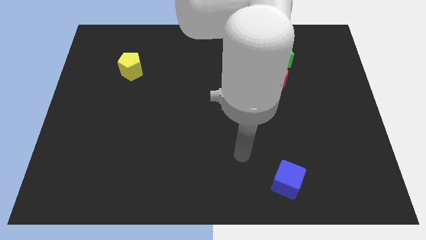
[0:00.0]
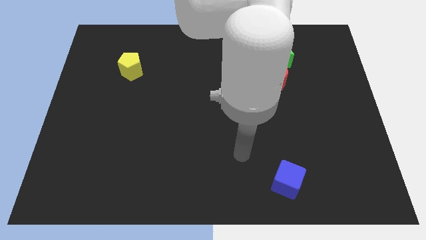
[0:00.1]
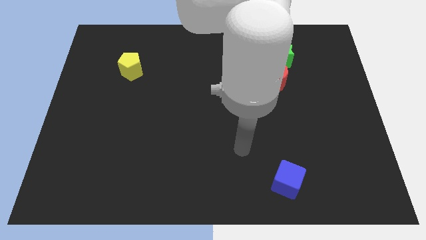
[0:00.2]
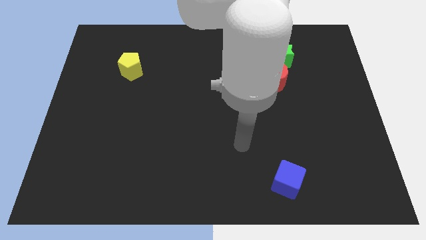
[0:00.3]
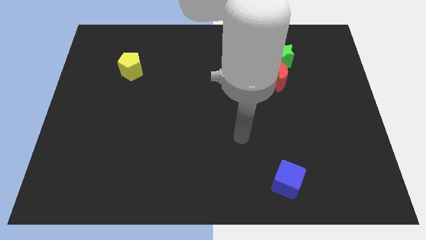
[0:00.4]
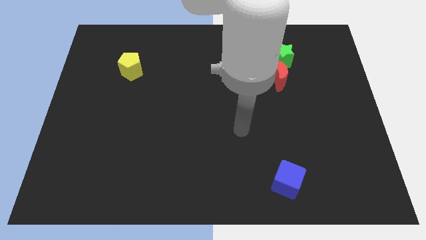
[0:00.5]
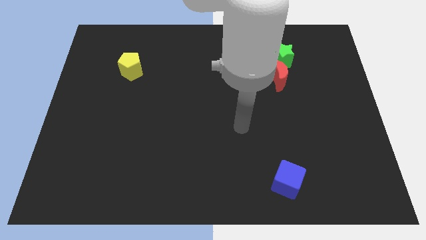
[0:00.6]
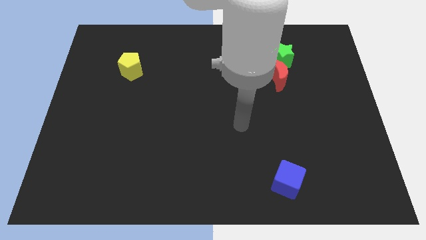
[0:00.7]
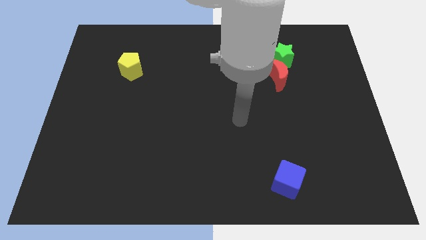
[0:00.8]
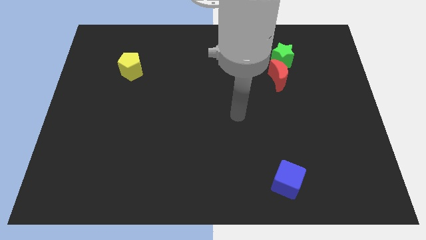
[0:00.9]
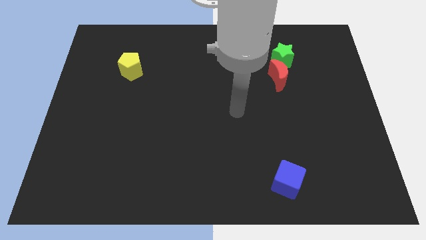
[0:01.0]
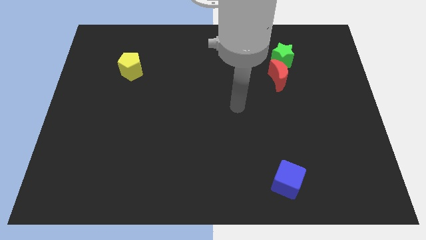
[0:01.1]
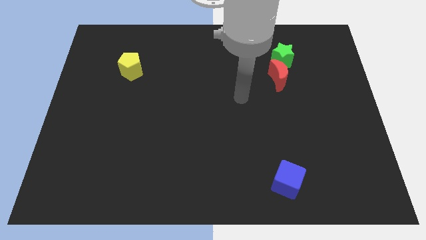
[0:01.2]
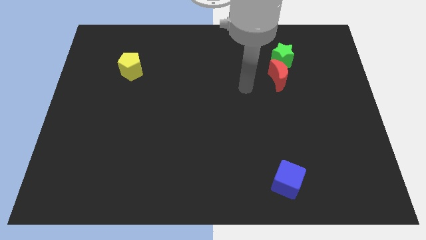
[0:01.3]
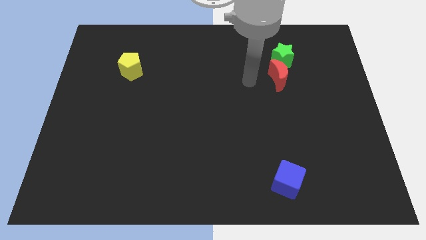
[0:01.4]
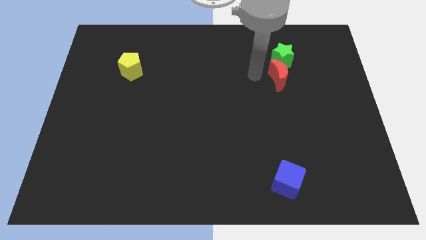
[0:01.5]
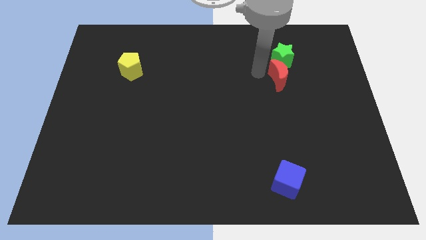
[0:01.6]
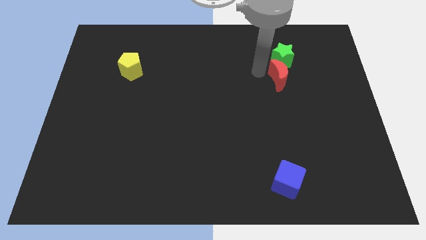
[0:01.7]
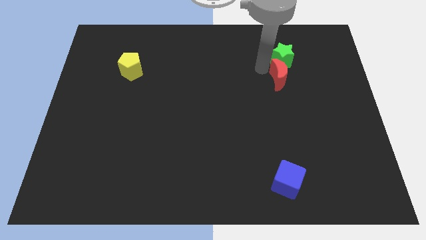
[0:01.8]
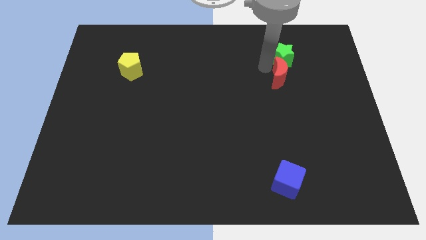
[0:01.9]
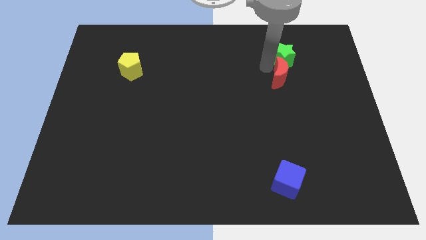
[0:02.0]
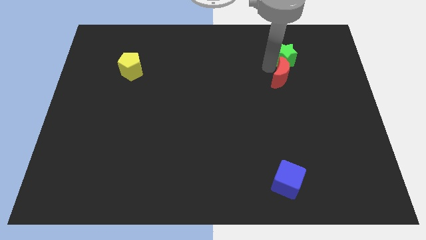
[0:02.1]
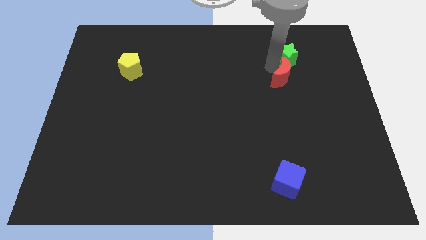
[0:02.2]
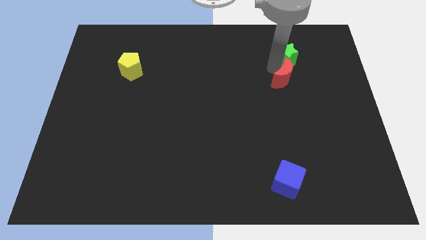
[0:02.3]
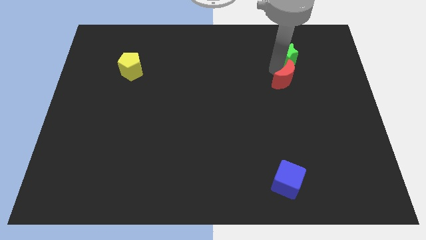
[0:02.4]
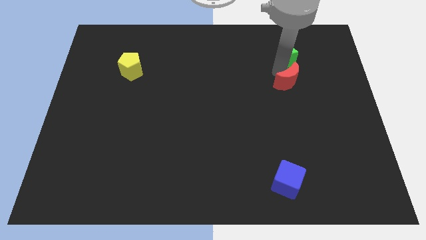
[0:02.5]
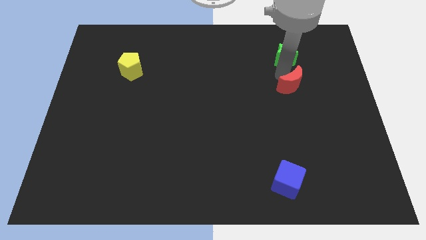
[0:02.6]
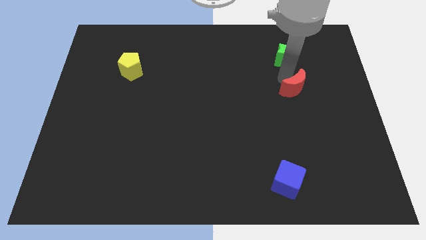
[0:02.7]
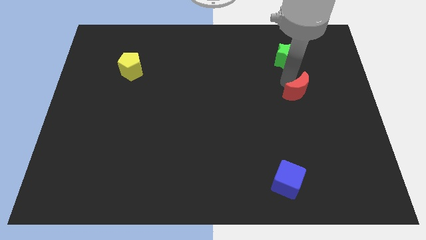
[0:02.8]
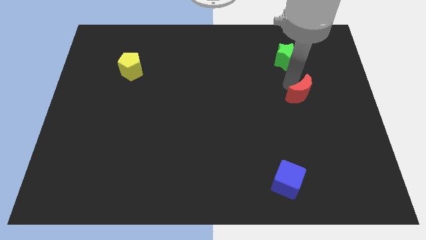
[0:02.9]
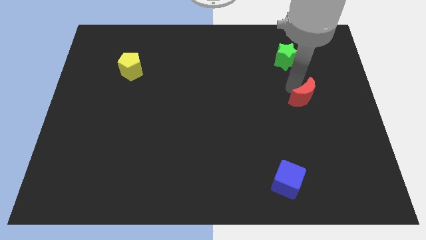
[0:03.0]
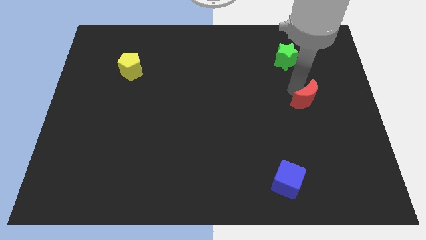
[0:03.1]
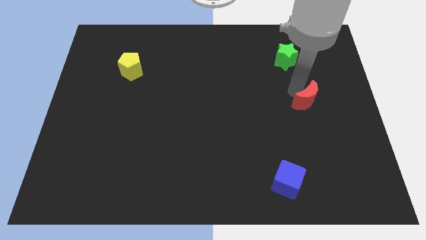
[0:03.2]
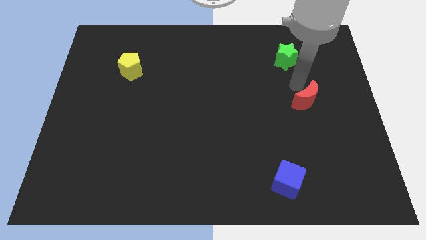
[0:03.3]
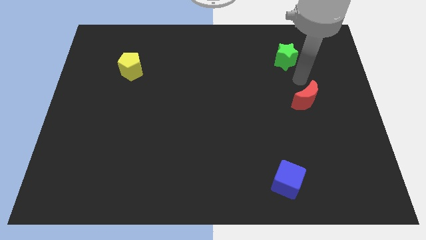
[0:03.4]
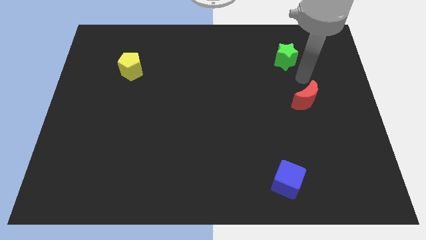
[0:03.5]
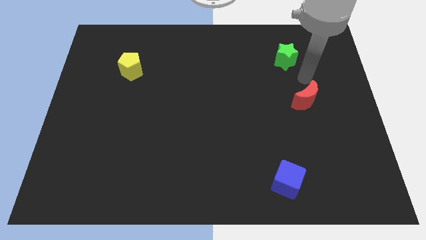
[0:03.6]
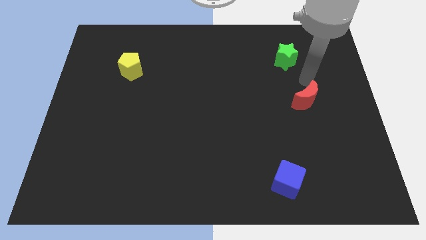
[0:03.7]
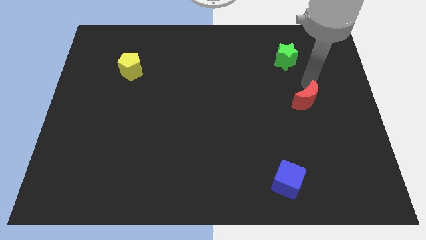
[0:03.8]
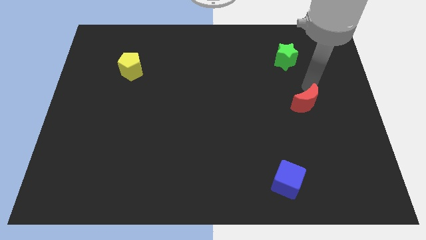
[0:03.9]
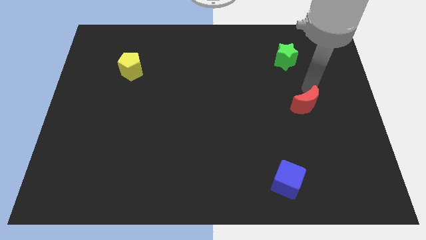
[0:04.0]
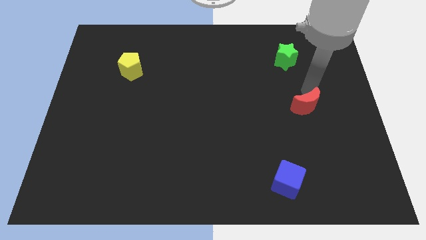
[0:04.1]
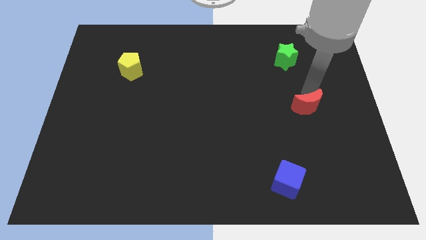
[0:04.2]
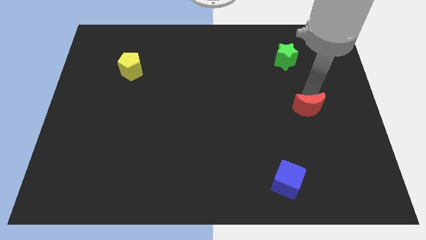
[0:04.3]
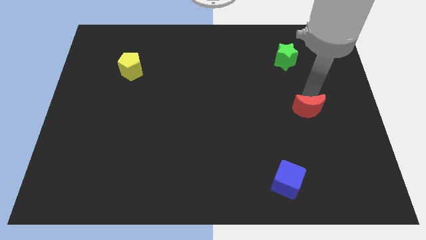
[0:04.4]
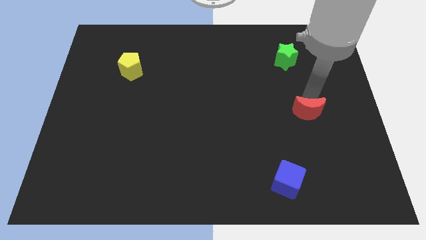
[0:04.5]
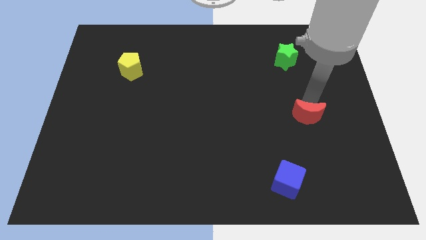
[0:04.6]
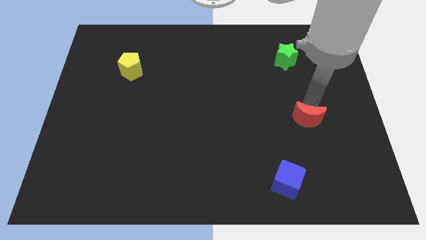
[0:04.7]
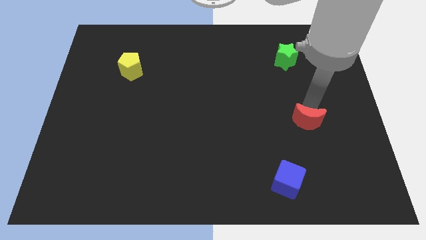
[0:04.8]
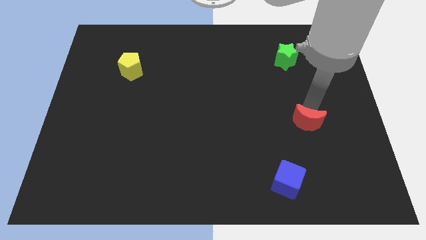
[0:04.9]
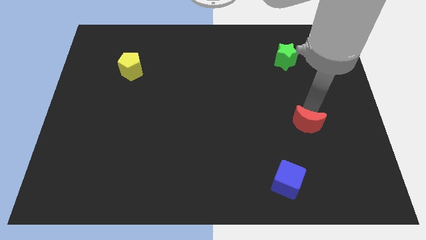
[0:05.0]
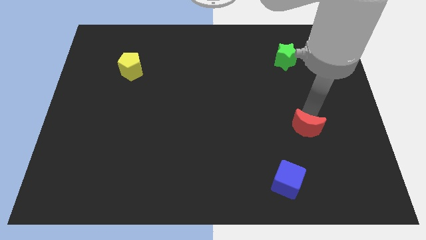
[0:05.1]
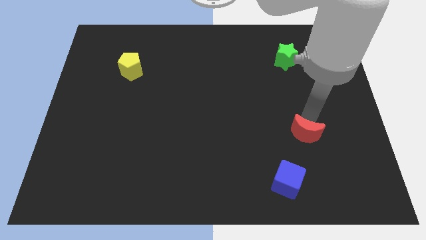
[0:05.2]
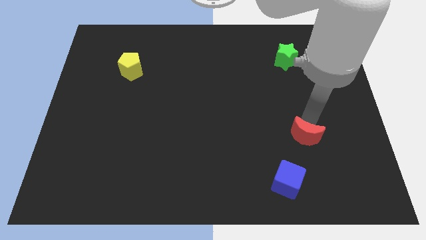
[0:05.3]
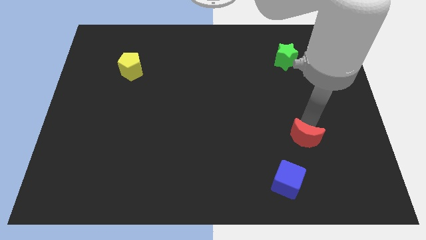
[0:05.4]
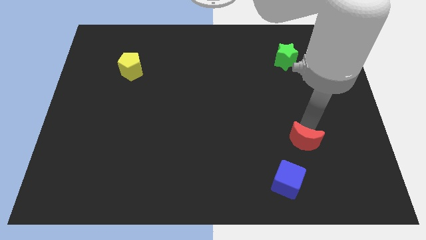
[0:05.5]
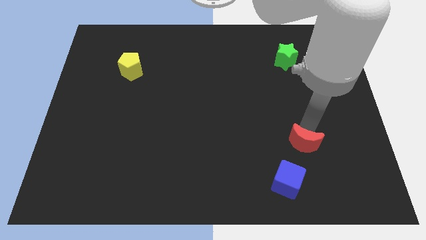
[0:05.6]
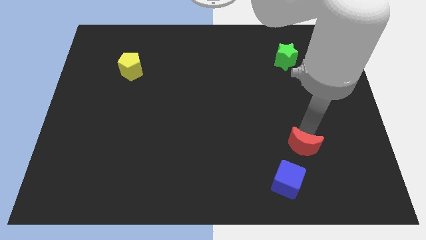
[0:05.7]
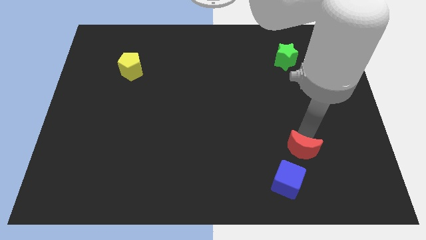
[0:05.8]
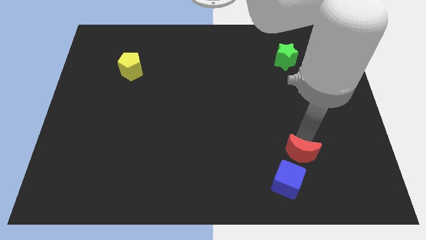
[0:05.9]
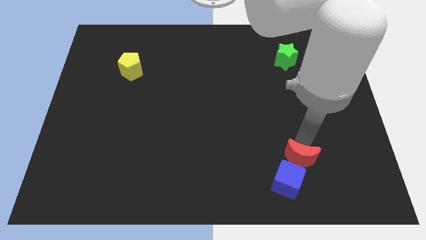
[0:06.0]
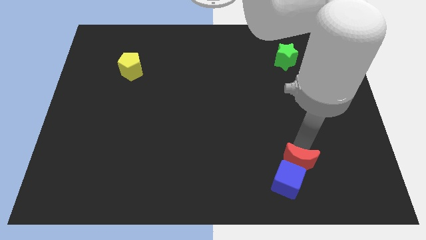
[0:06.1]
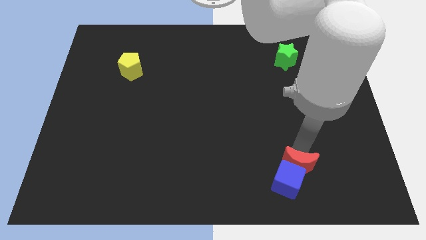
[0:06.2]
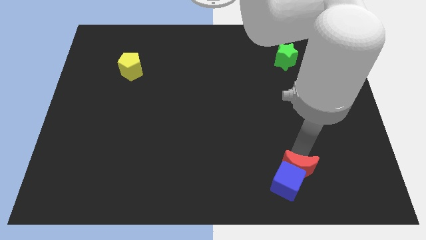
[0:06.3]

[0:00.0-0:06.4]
move the red moon to the blue block

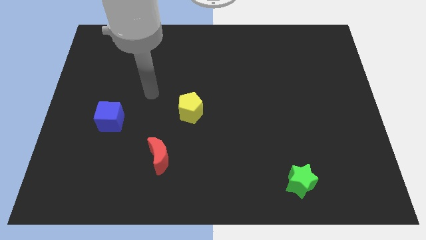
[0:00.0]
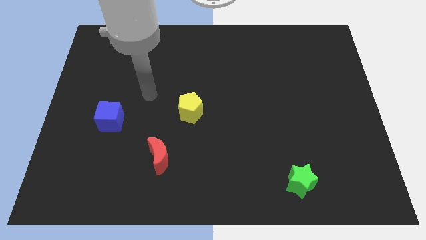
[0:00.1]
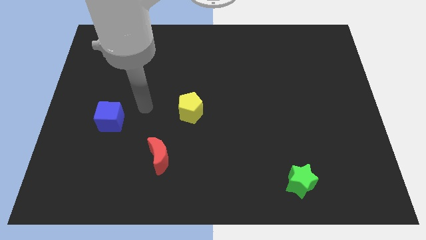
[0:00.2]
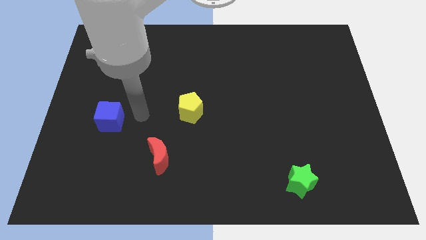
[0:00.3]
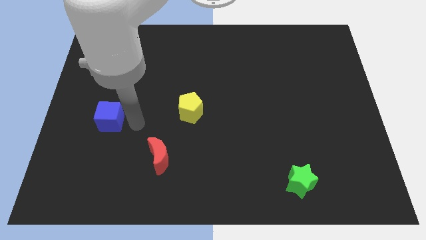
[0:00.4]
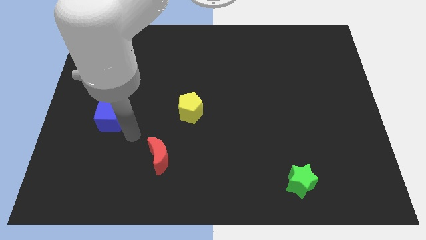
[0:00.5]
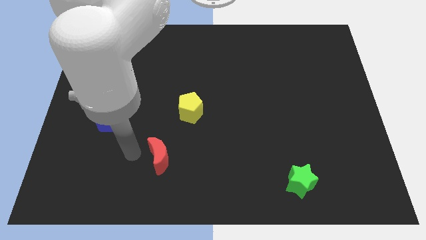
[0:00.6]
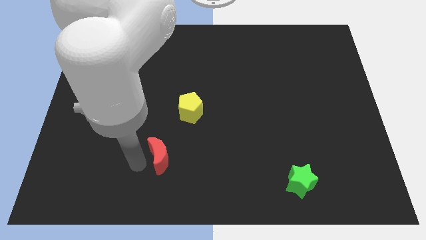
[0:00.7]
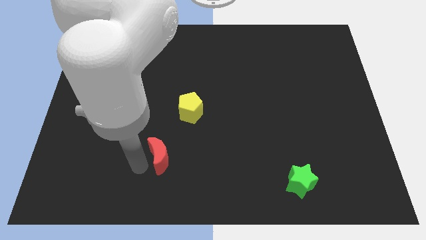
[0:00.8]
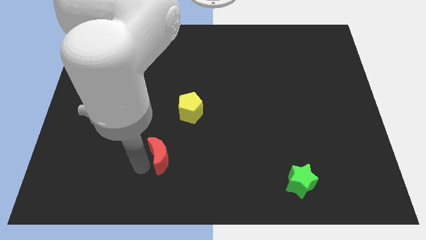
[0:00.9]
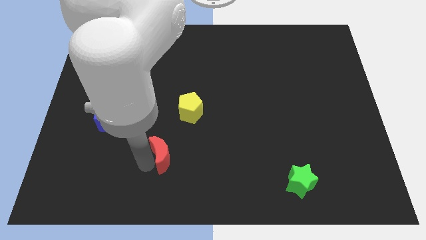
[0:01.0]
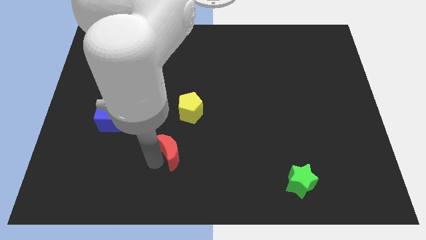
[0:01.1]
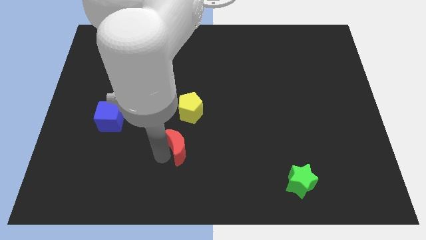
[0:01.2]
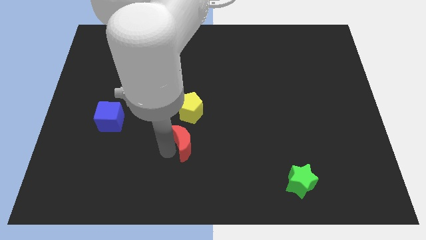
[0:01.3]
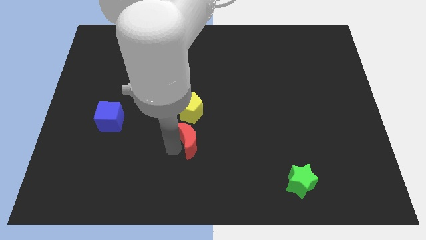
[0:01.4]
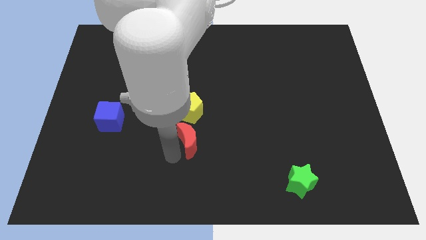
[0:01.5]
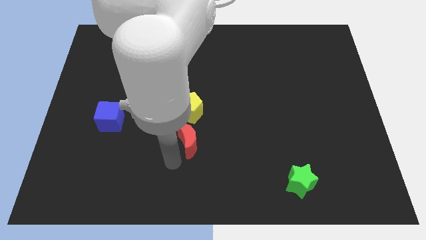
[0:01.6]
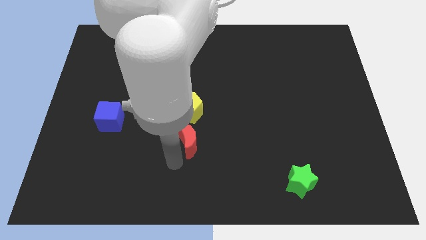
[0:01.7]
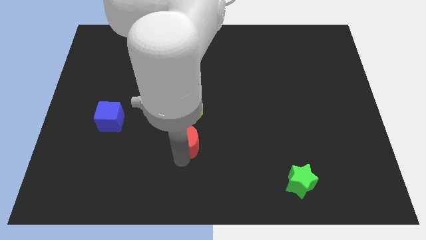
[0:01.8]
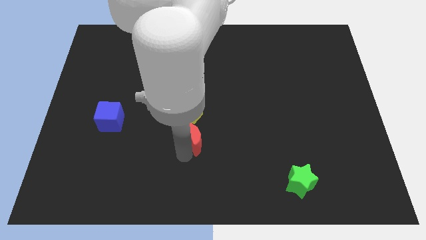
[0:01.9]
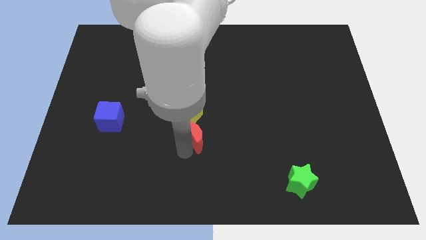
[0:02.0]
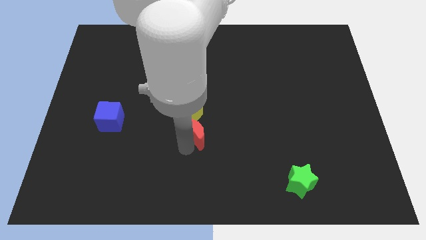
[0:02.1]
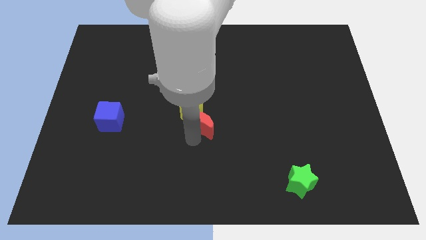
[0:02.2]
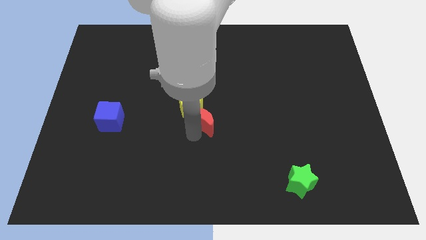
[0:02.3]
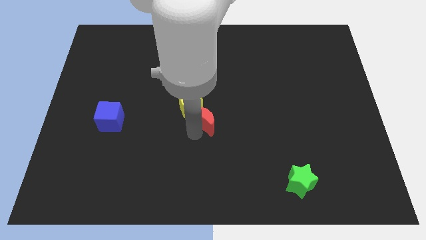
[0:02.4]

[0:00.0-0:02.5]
push the moon towards the yellow block
